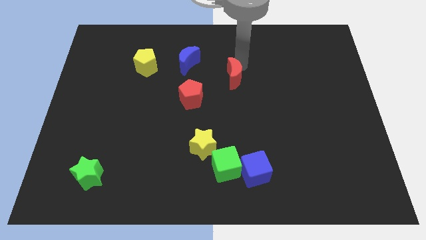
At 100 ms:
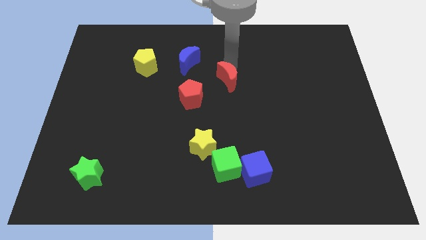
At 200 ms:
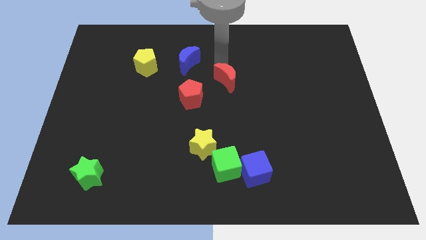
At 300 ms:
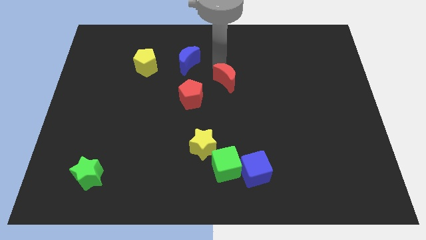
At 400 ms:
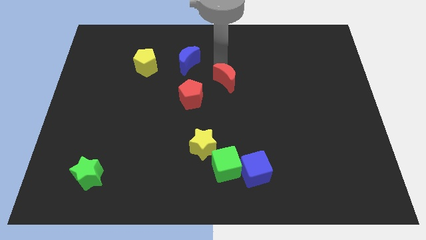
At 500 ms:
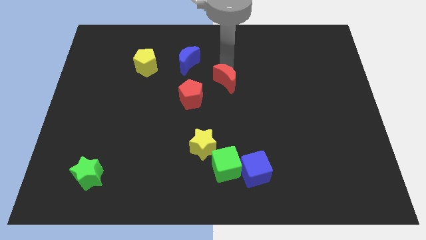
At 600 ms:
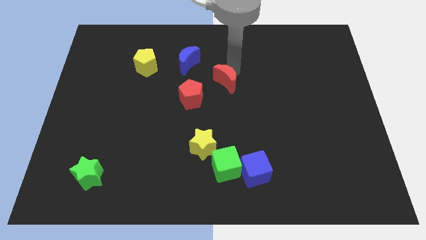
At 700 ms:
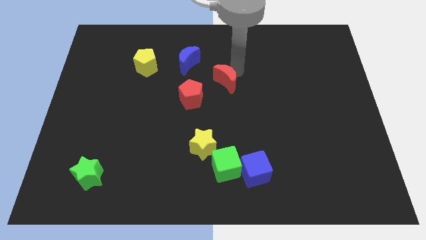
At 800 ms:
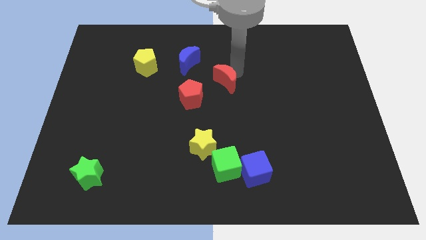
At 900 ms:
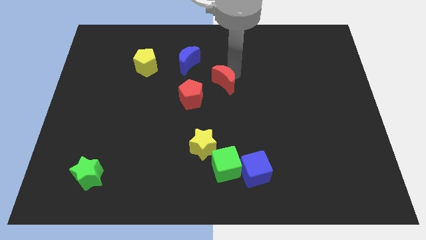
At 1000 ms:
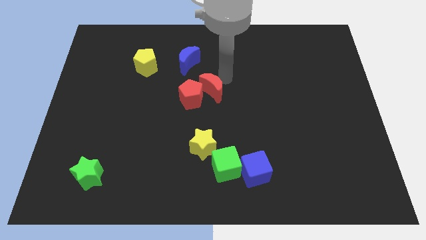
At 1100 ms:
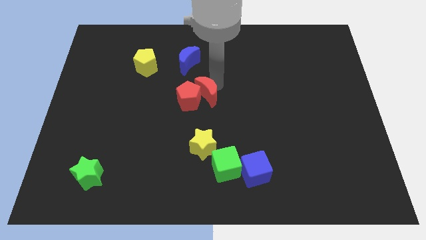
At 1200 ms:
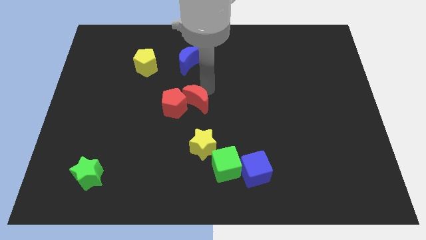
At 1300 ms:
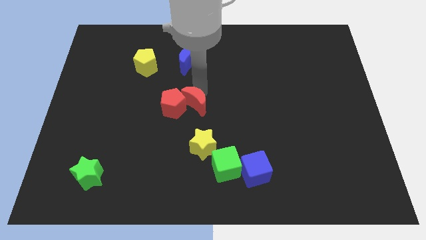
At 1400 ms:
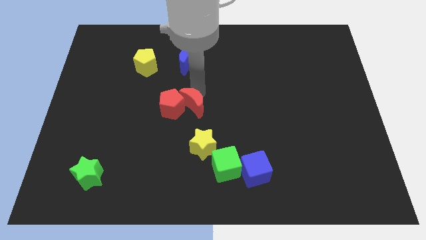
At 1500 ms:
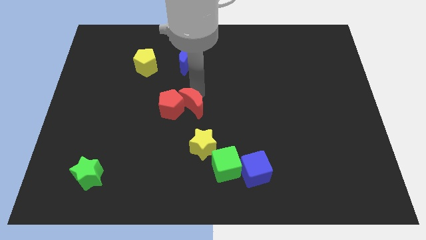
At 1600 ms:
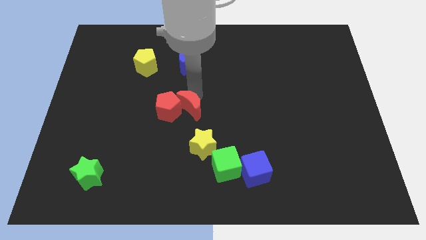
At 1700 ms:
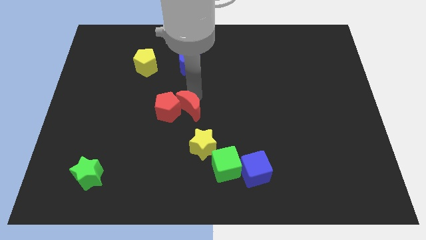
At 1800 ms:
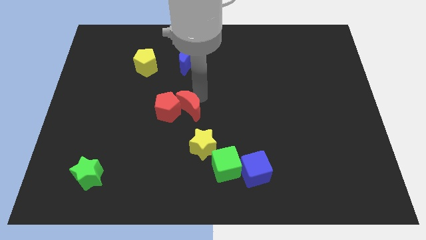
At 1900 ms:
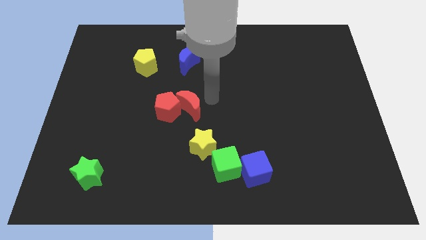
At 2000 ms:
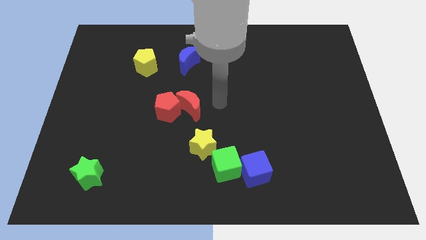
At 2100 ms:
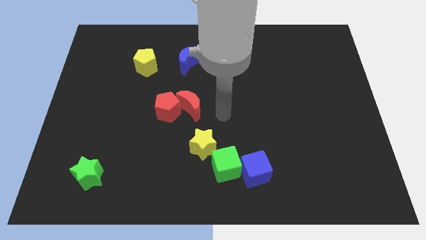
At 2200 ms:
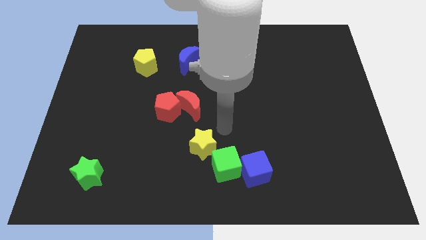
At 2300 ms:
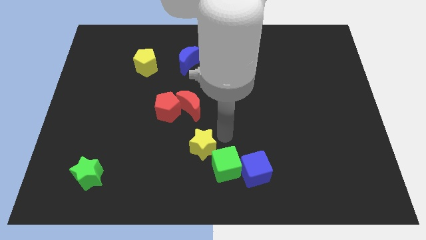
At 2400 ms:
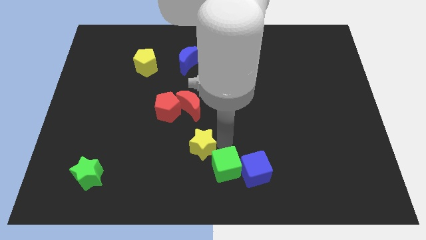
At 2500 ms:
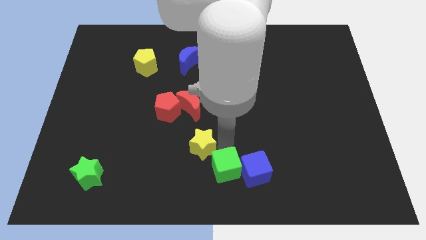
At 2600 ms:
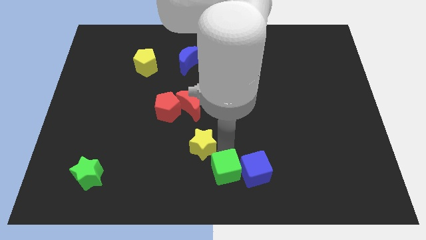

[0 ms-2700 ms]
place your arm above green cube

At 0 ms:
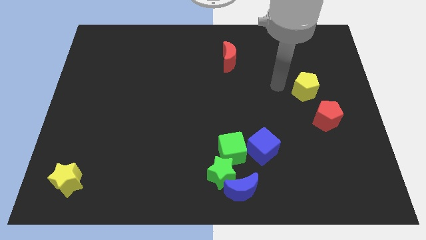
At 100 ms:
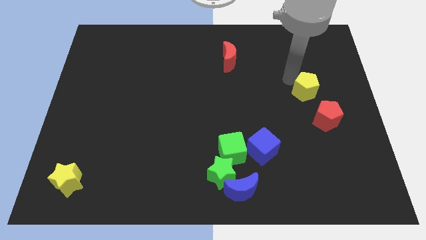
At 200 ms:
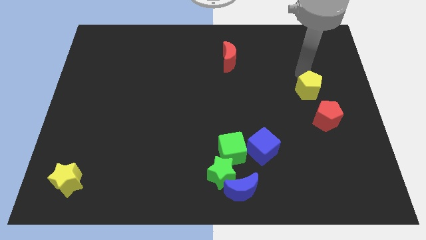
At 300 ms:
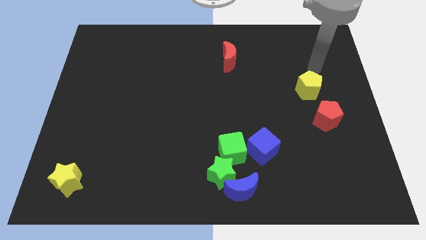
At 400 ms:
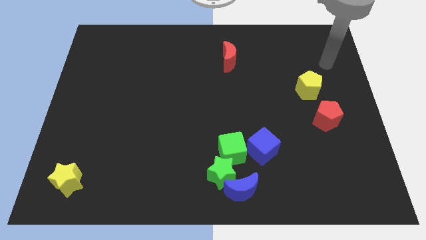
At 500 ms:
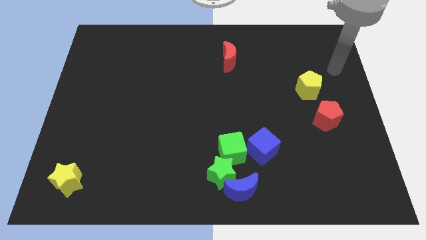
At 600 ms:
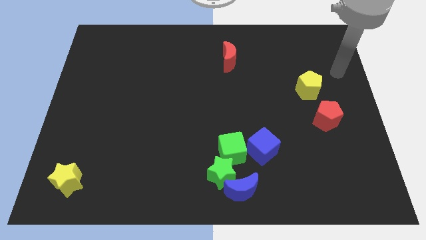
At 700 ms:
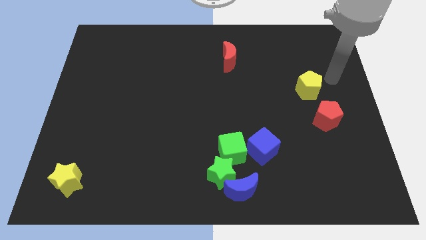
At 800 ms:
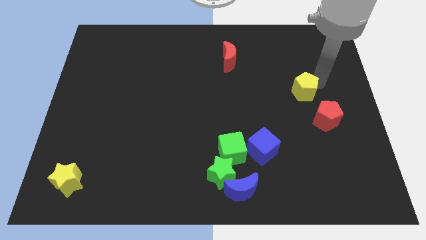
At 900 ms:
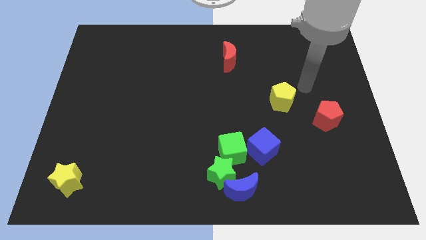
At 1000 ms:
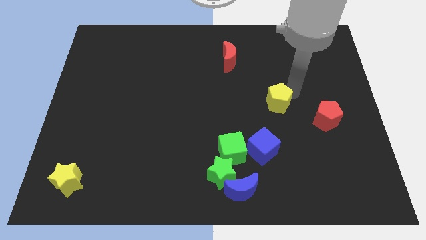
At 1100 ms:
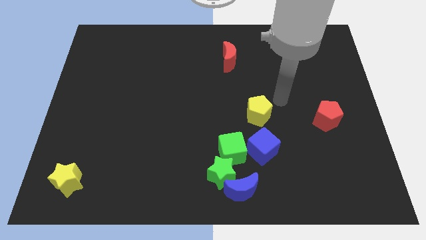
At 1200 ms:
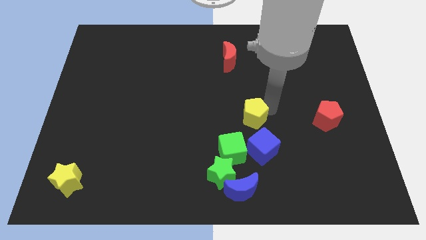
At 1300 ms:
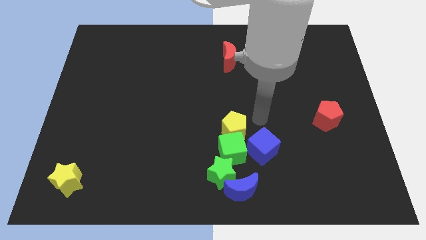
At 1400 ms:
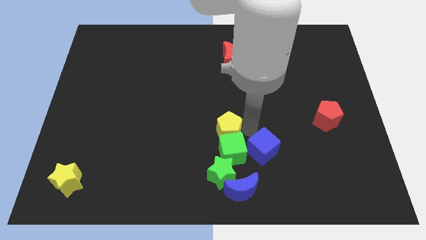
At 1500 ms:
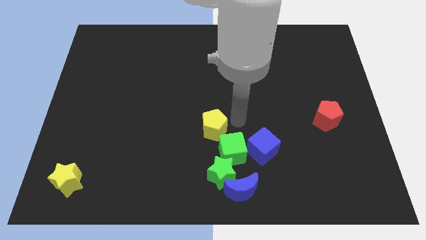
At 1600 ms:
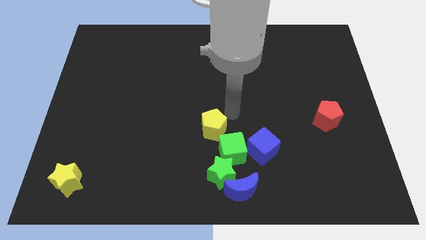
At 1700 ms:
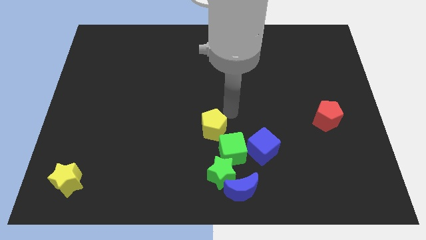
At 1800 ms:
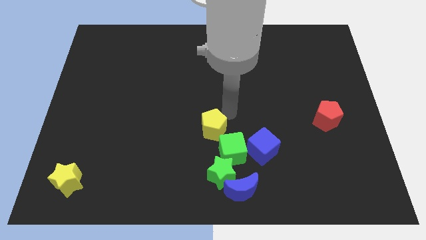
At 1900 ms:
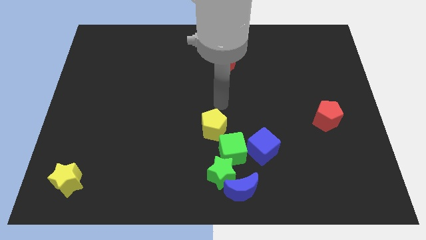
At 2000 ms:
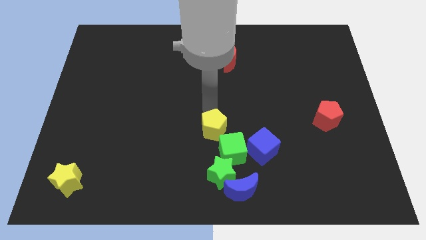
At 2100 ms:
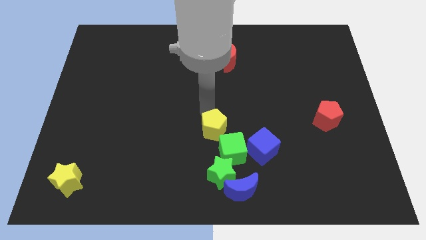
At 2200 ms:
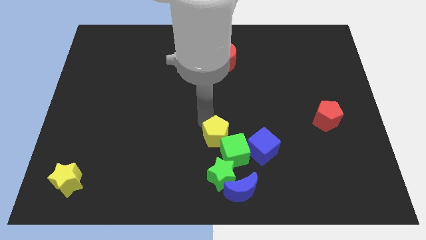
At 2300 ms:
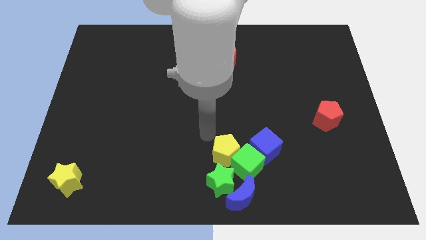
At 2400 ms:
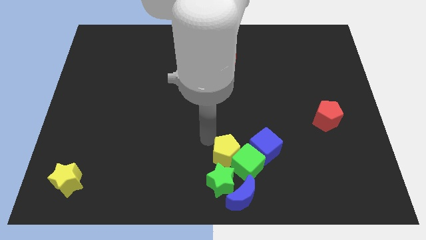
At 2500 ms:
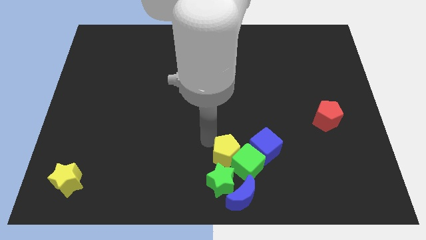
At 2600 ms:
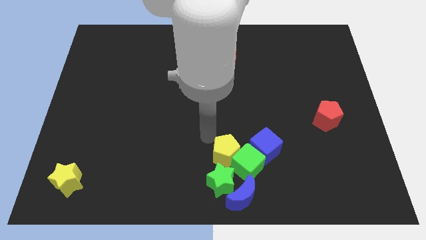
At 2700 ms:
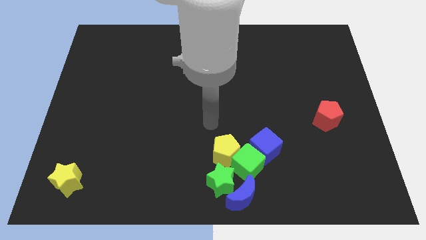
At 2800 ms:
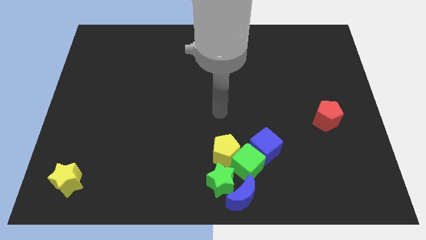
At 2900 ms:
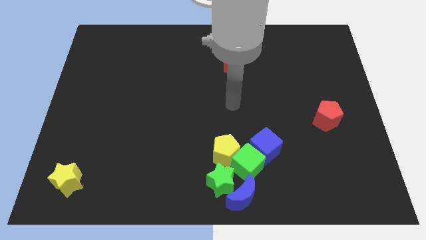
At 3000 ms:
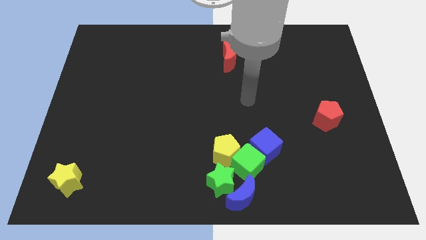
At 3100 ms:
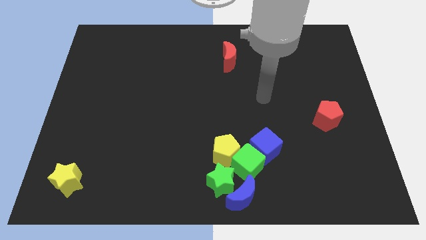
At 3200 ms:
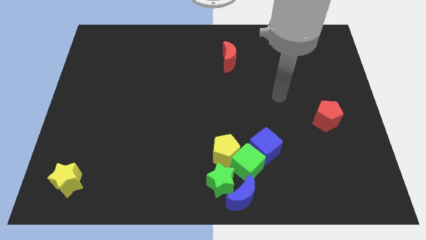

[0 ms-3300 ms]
add yellow pentagon to the group of blue and green blocks

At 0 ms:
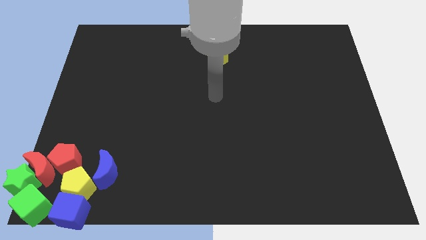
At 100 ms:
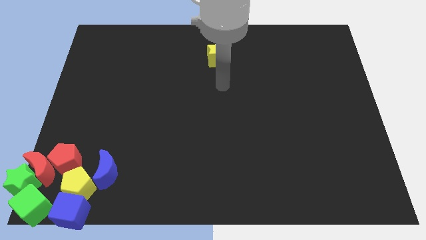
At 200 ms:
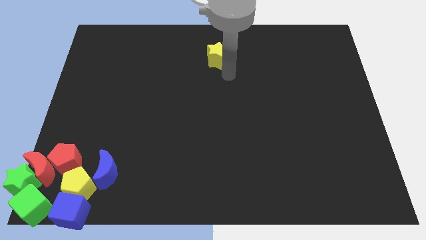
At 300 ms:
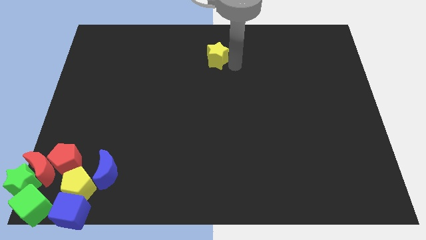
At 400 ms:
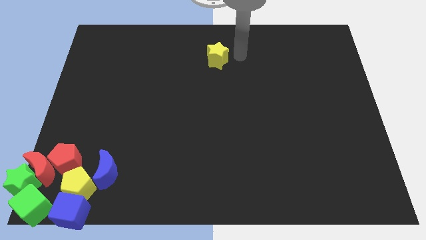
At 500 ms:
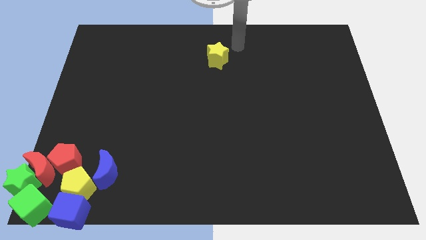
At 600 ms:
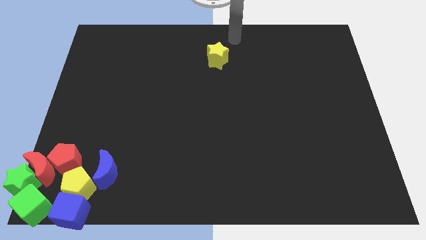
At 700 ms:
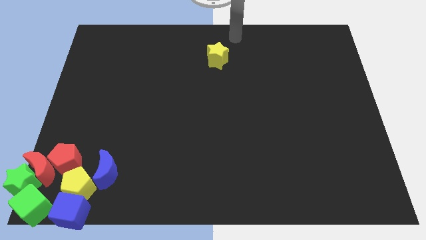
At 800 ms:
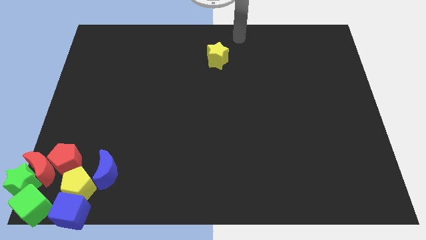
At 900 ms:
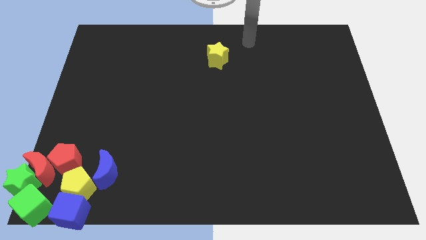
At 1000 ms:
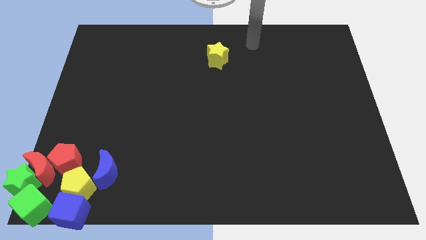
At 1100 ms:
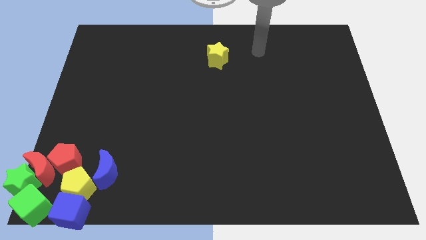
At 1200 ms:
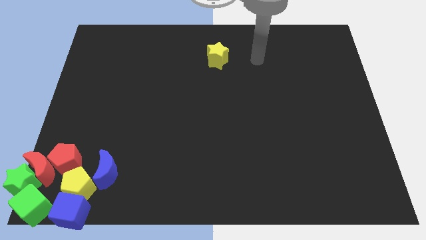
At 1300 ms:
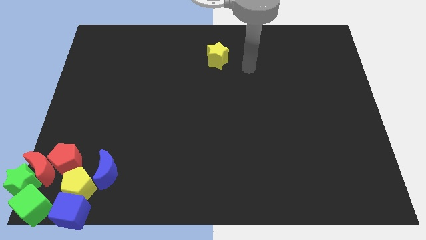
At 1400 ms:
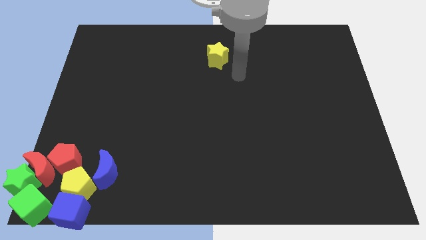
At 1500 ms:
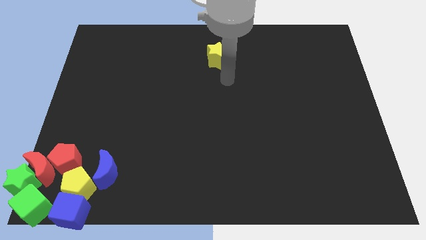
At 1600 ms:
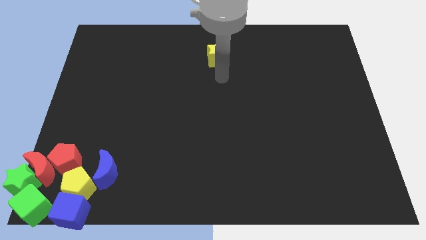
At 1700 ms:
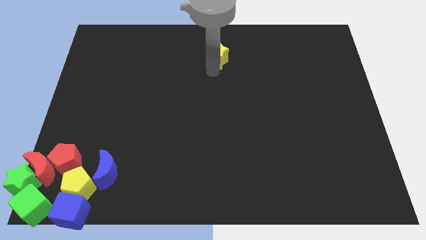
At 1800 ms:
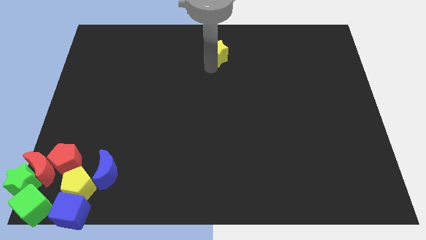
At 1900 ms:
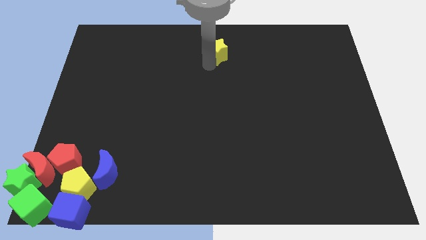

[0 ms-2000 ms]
move yellow star towards the top center of the board

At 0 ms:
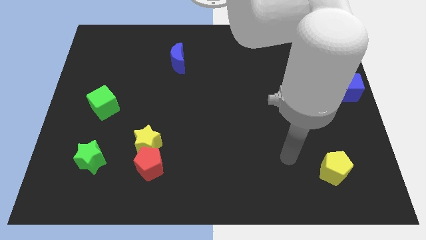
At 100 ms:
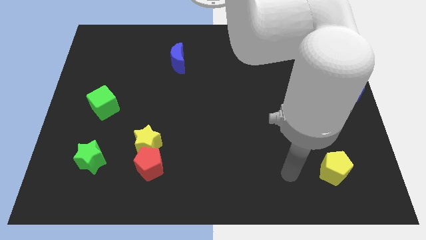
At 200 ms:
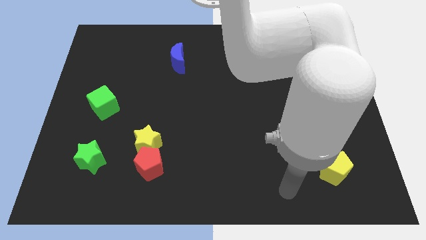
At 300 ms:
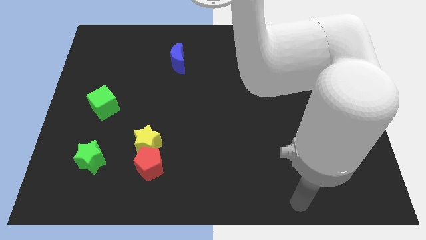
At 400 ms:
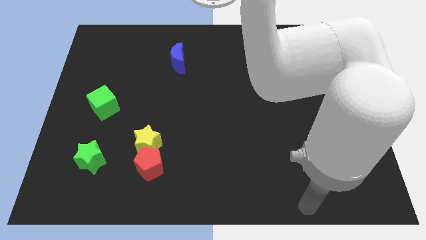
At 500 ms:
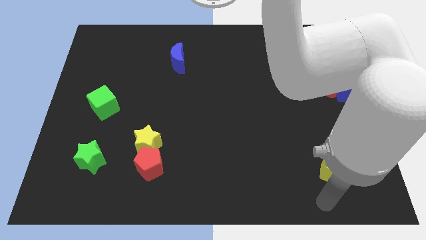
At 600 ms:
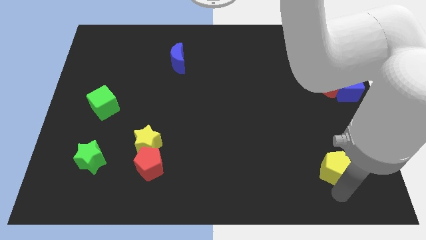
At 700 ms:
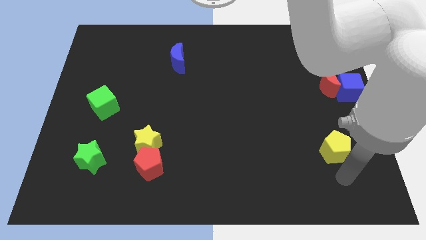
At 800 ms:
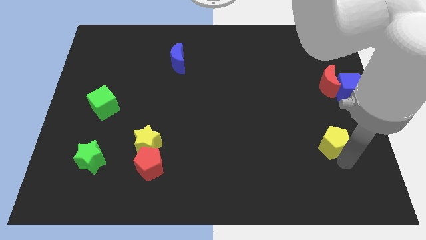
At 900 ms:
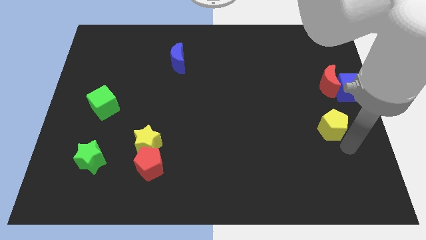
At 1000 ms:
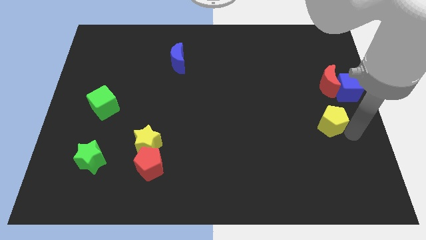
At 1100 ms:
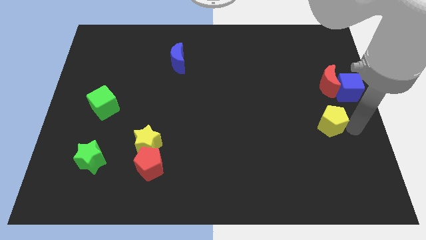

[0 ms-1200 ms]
move yellow pentagon upwards
